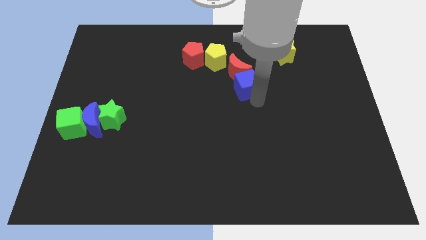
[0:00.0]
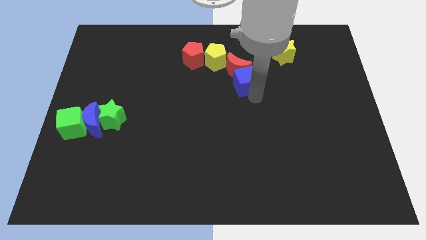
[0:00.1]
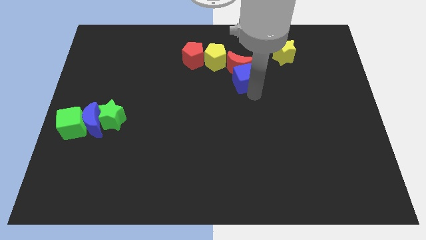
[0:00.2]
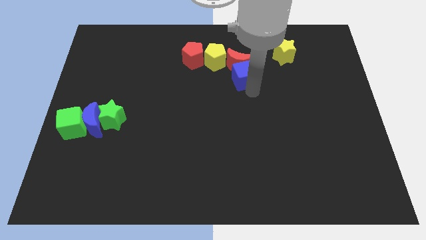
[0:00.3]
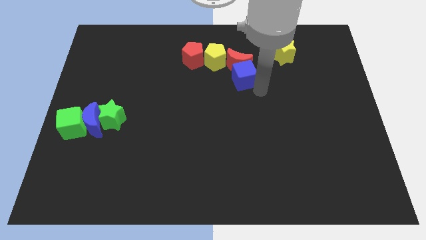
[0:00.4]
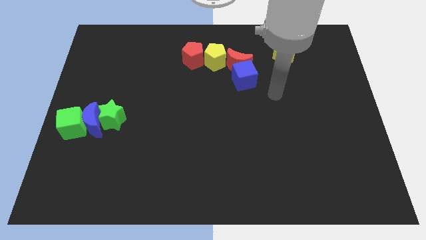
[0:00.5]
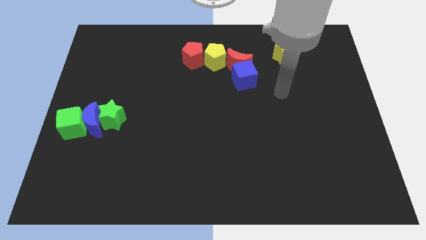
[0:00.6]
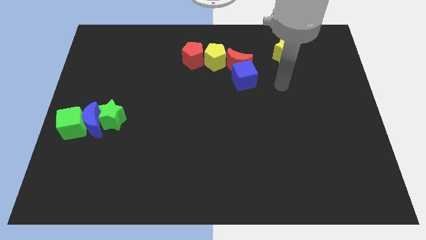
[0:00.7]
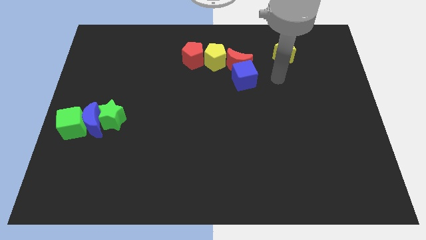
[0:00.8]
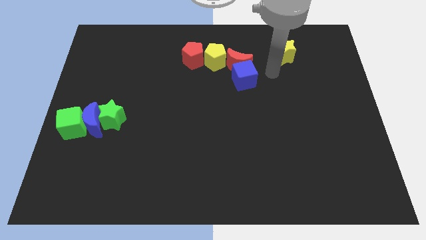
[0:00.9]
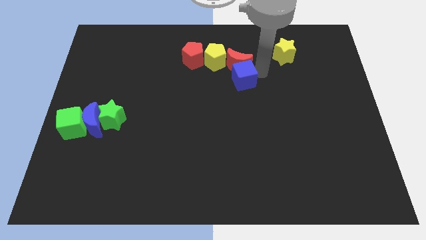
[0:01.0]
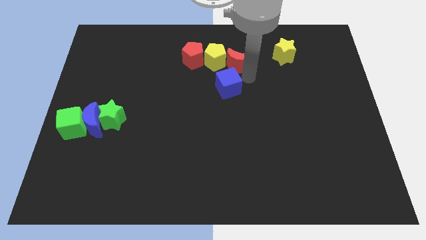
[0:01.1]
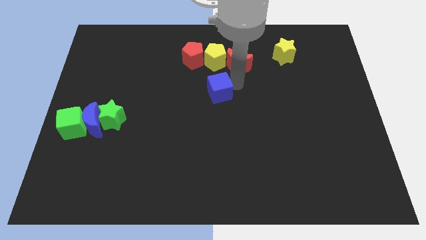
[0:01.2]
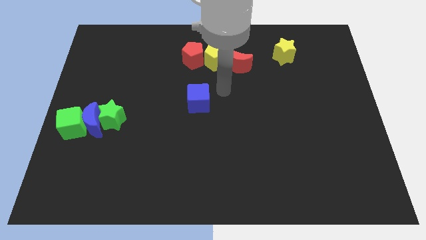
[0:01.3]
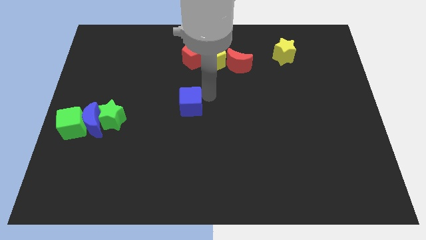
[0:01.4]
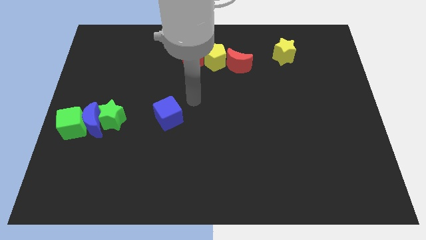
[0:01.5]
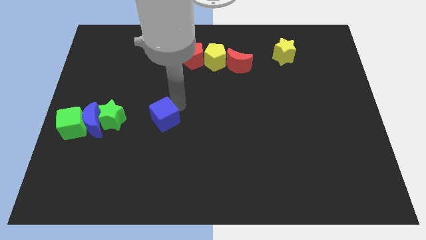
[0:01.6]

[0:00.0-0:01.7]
slide the blue cube towards the group of blocks

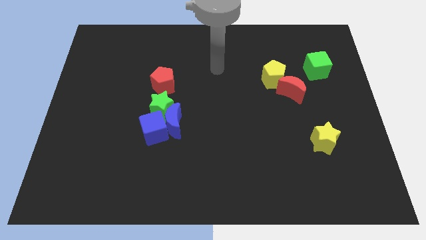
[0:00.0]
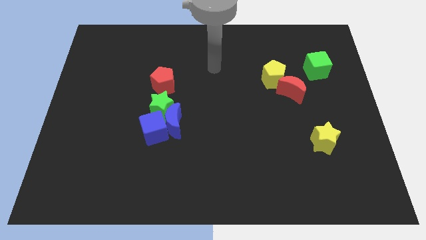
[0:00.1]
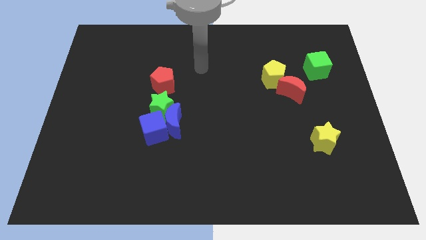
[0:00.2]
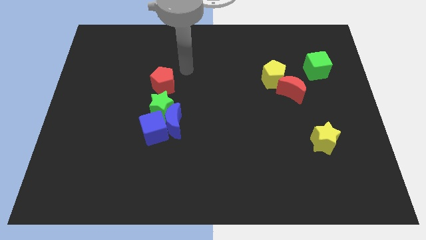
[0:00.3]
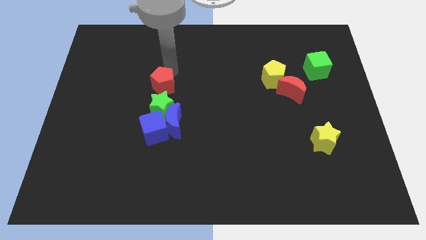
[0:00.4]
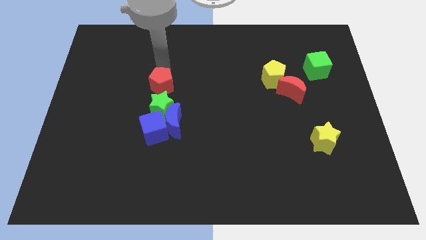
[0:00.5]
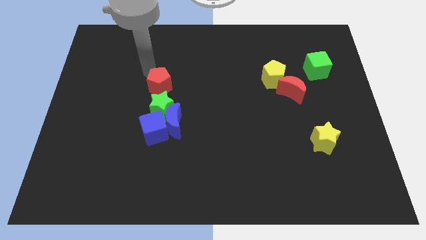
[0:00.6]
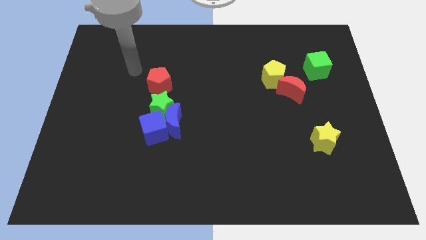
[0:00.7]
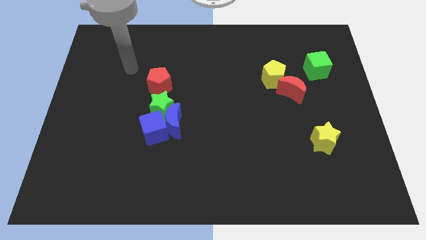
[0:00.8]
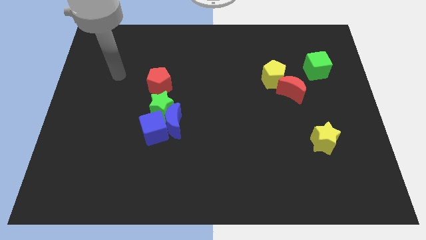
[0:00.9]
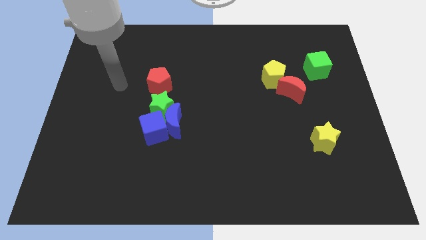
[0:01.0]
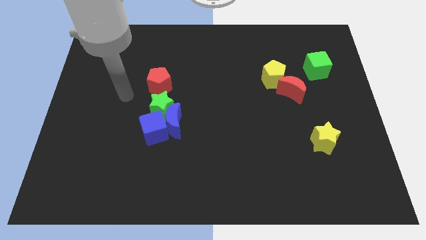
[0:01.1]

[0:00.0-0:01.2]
place your hand parallel left to the red pentagon

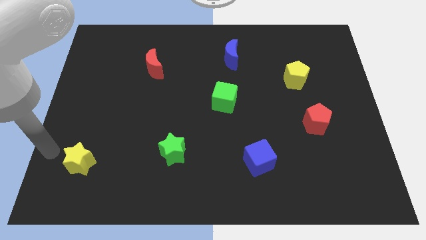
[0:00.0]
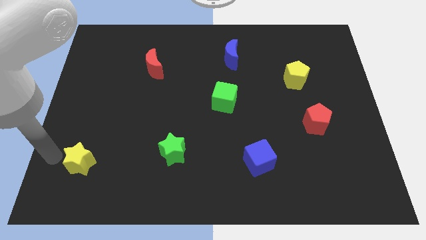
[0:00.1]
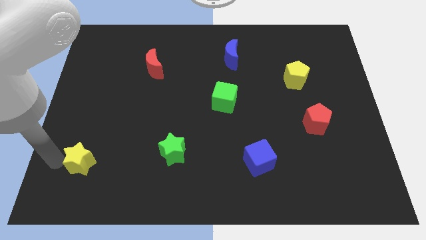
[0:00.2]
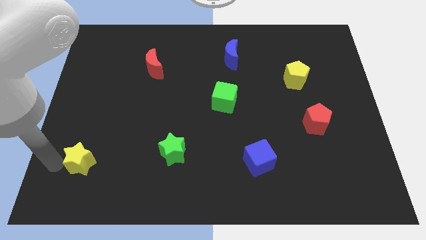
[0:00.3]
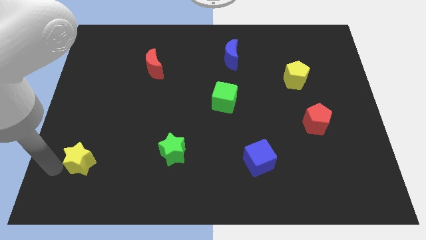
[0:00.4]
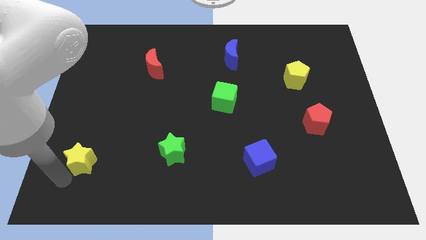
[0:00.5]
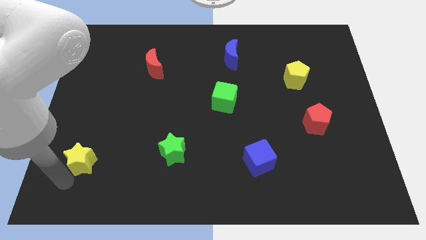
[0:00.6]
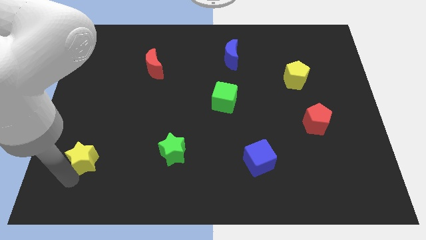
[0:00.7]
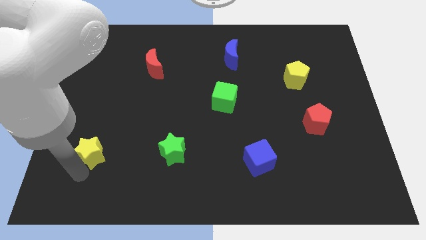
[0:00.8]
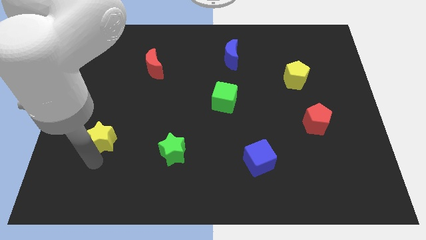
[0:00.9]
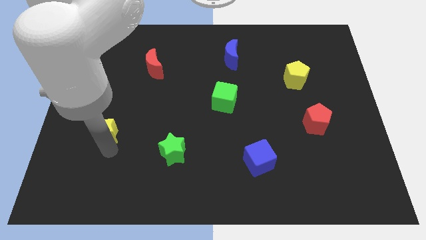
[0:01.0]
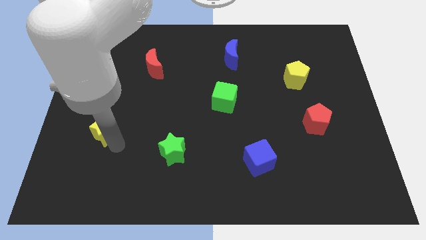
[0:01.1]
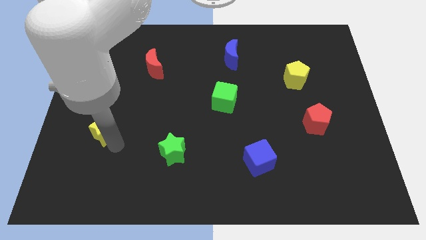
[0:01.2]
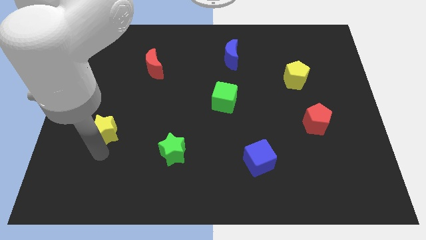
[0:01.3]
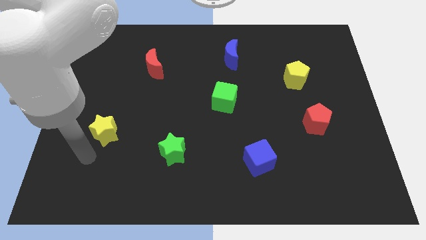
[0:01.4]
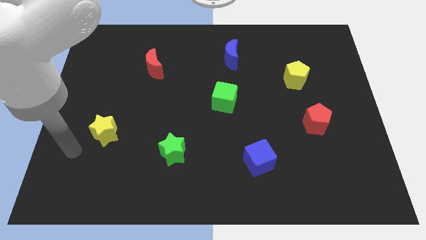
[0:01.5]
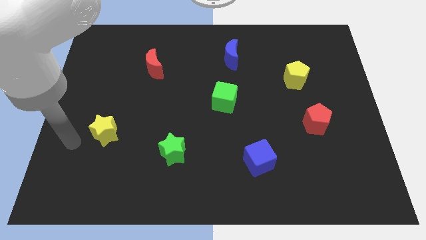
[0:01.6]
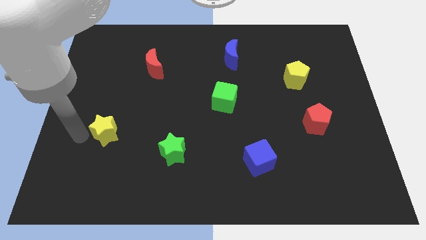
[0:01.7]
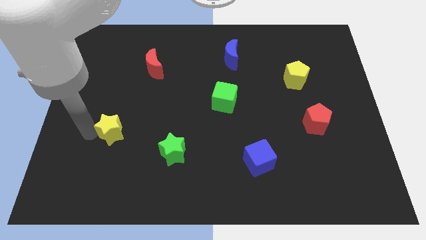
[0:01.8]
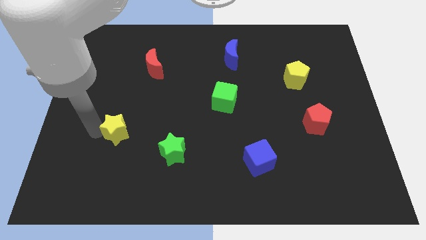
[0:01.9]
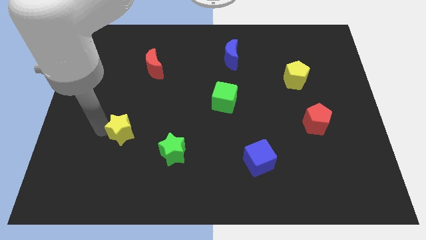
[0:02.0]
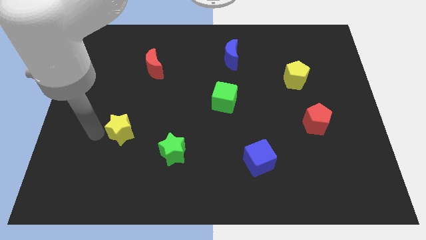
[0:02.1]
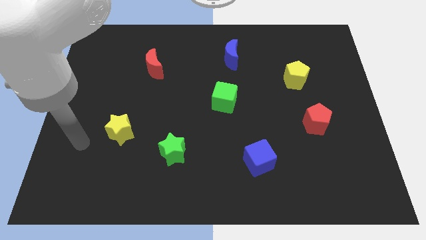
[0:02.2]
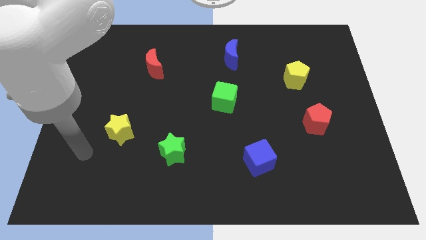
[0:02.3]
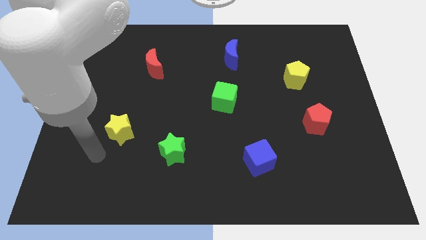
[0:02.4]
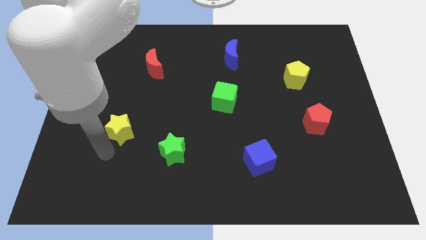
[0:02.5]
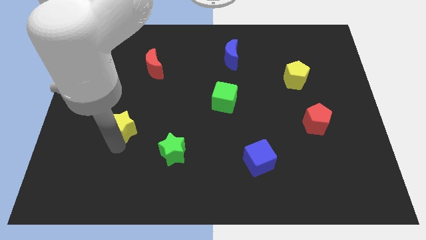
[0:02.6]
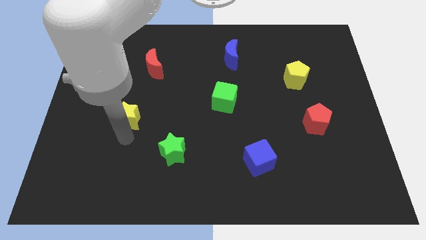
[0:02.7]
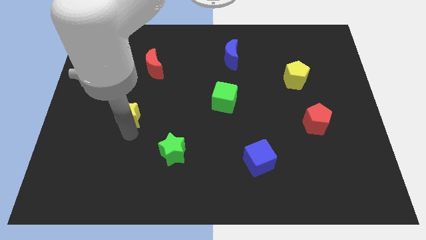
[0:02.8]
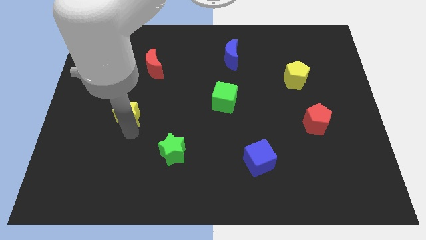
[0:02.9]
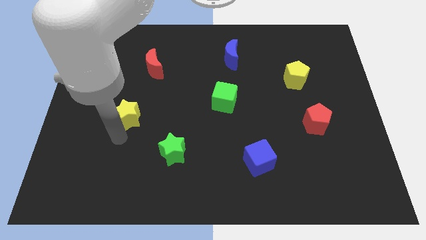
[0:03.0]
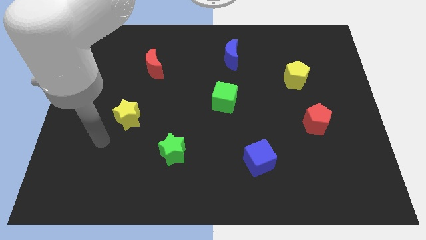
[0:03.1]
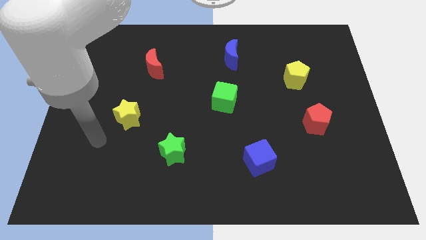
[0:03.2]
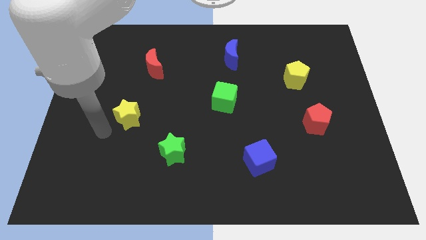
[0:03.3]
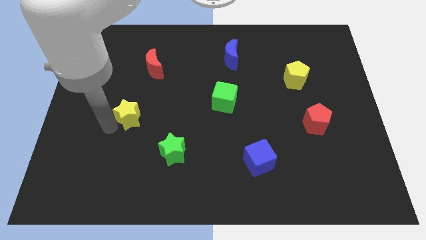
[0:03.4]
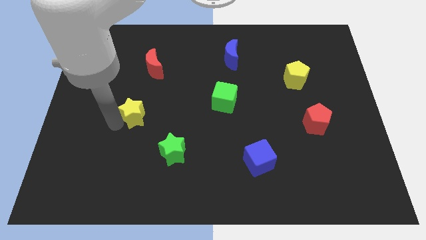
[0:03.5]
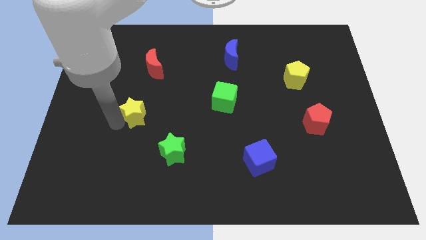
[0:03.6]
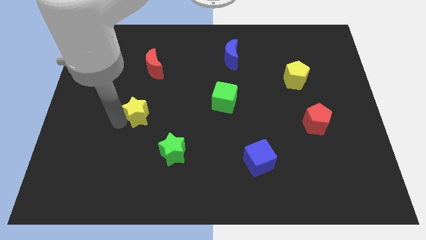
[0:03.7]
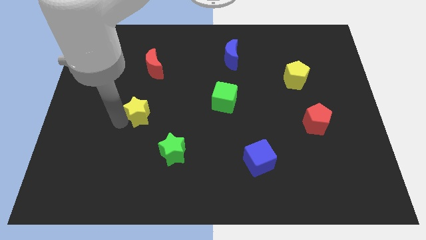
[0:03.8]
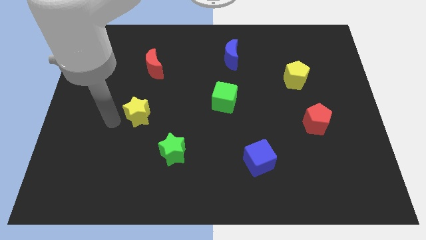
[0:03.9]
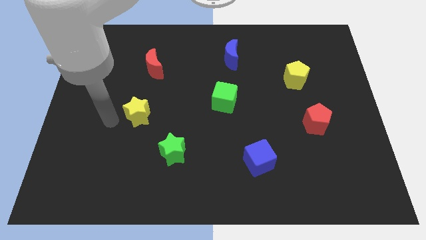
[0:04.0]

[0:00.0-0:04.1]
push yellow star towards the center of board

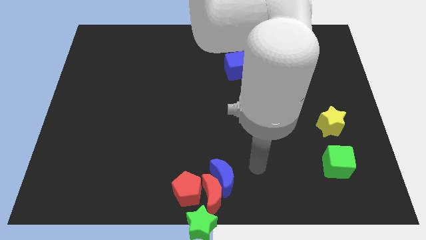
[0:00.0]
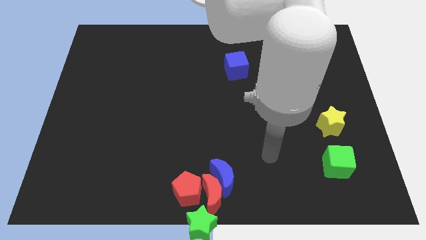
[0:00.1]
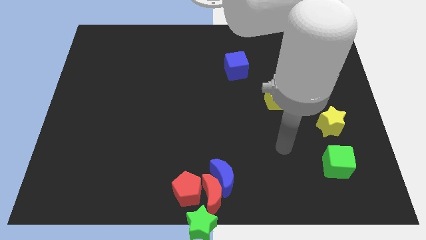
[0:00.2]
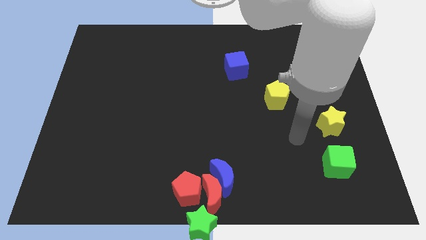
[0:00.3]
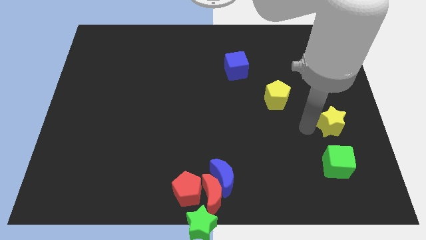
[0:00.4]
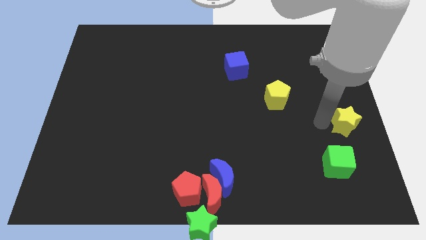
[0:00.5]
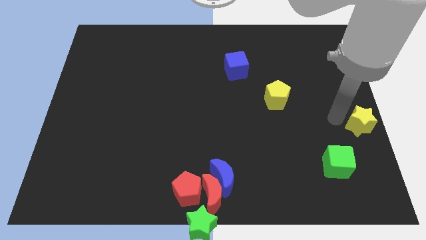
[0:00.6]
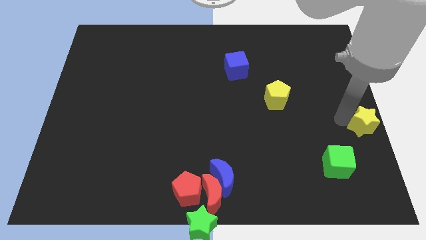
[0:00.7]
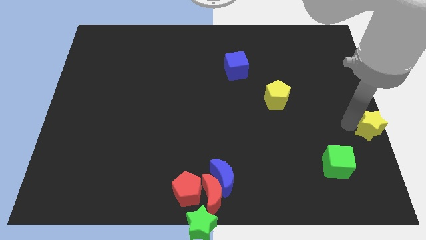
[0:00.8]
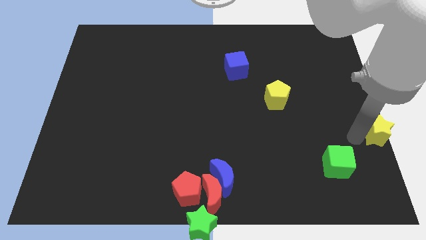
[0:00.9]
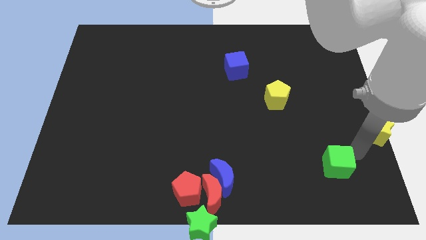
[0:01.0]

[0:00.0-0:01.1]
slide yellow star to the right center of the board

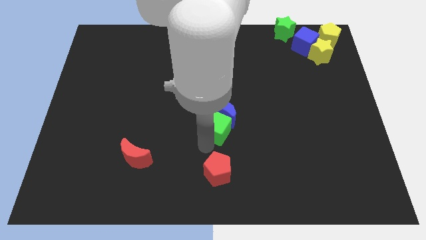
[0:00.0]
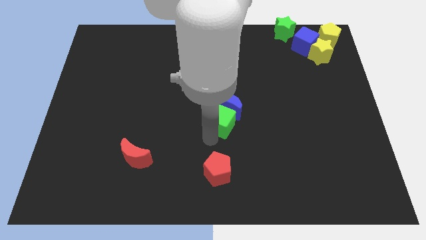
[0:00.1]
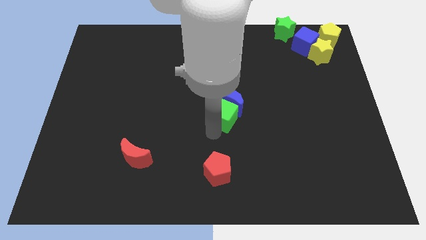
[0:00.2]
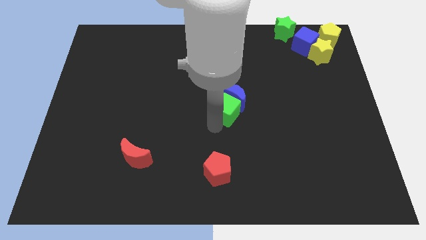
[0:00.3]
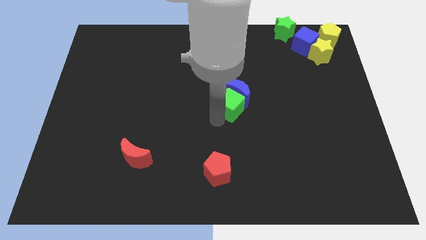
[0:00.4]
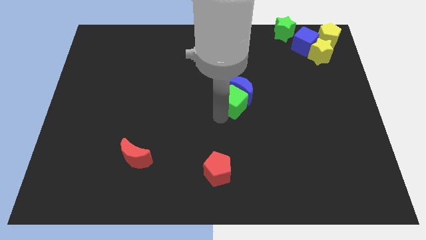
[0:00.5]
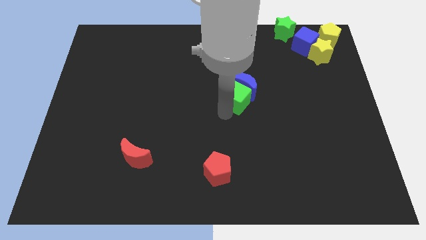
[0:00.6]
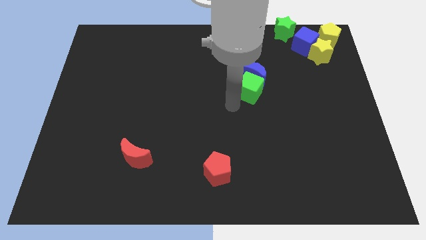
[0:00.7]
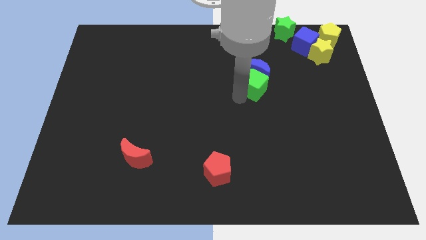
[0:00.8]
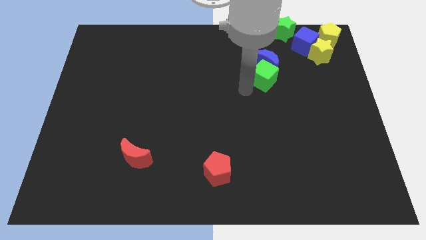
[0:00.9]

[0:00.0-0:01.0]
move the green cube and the blue crescent to the top right of the board
